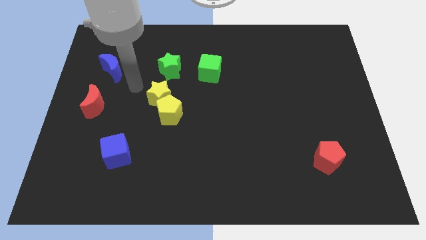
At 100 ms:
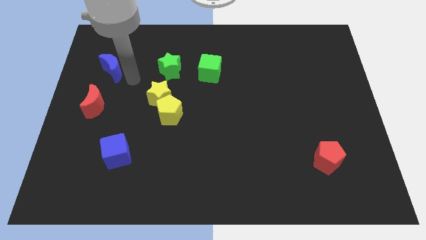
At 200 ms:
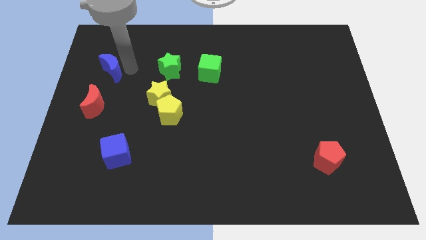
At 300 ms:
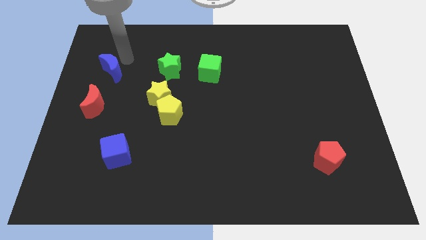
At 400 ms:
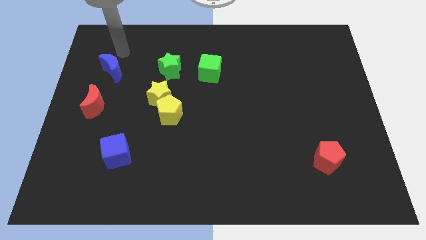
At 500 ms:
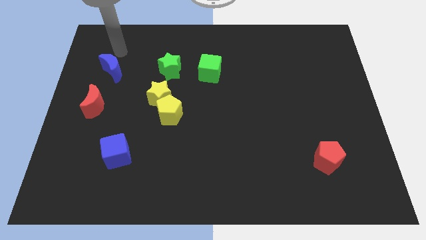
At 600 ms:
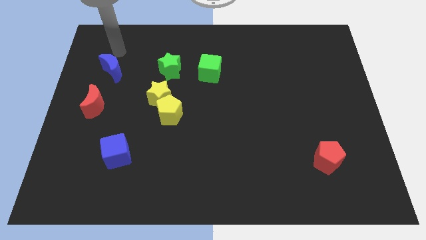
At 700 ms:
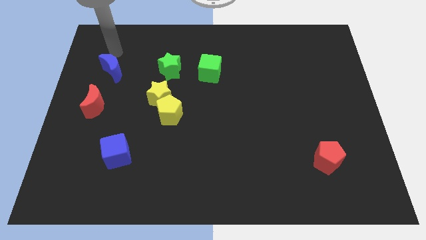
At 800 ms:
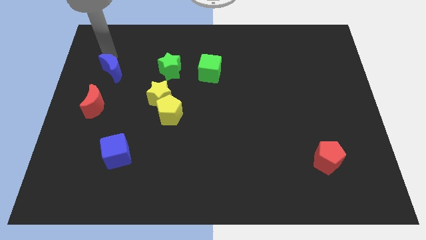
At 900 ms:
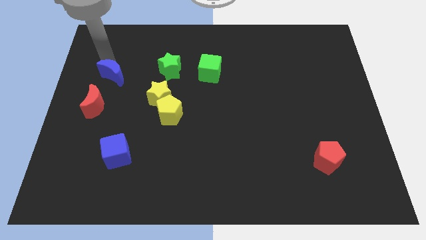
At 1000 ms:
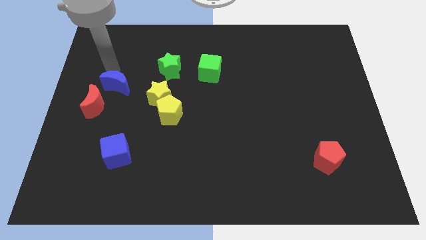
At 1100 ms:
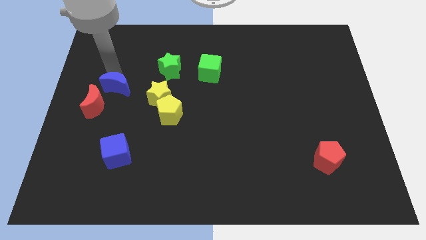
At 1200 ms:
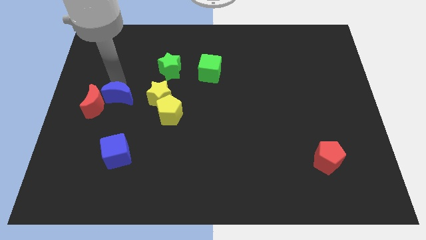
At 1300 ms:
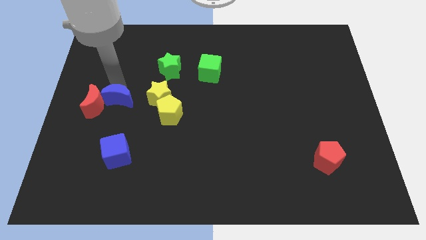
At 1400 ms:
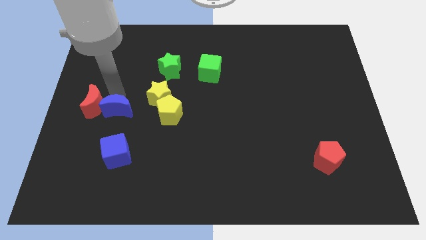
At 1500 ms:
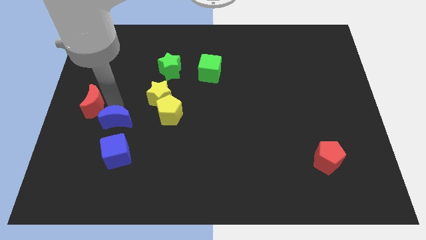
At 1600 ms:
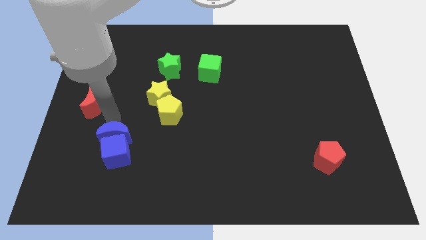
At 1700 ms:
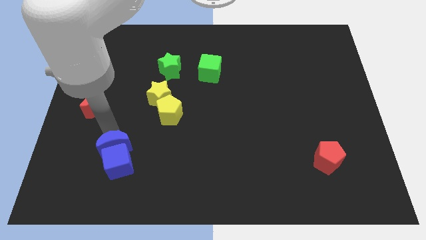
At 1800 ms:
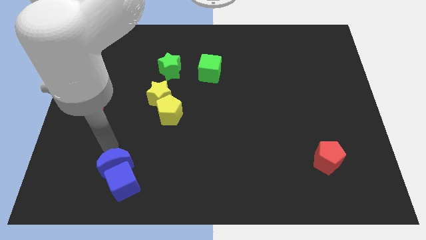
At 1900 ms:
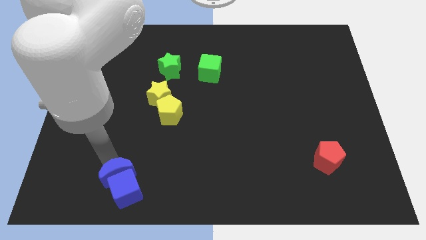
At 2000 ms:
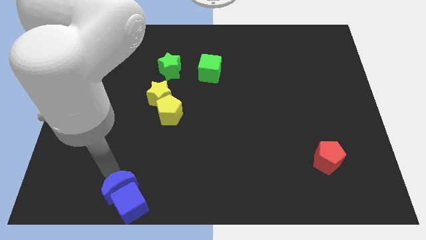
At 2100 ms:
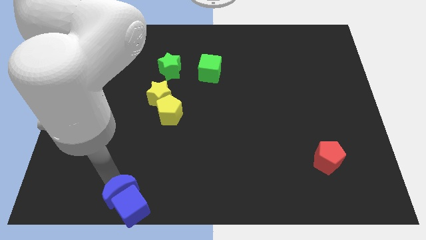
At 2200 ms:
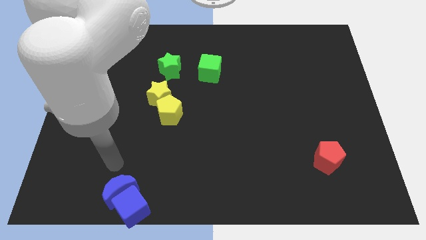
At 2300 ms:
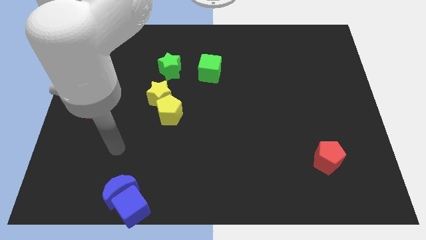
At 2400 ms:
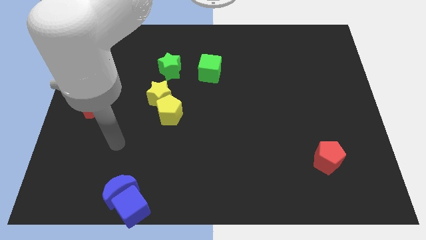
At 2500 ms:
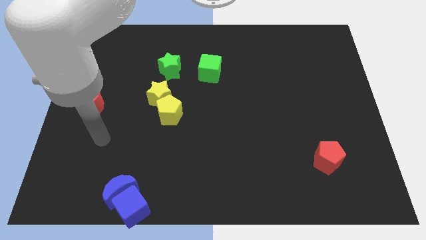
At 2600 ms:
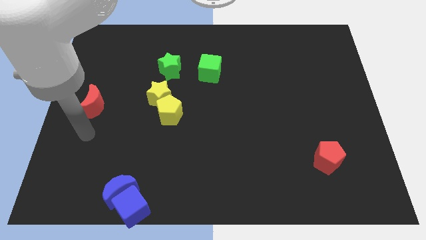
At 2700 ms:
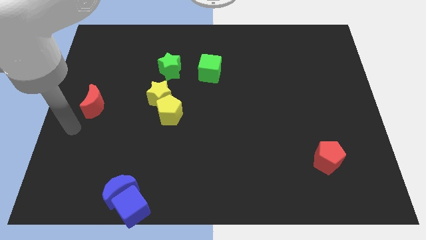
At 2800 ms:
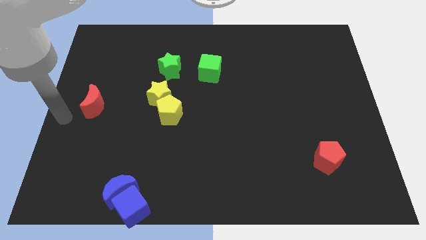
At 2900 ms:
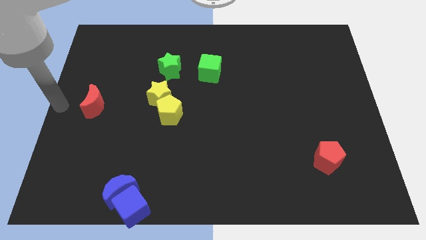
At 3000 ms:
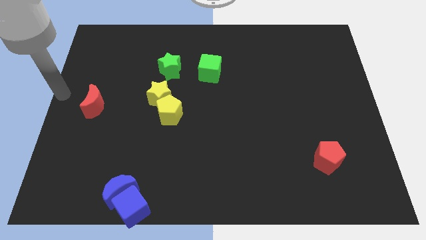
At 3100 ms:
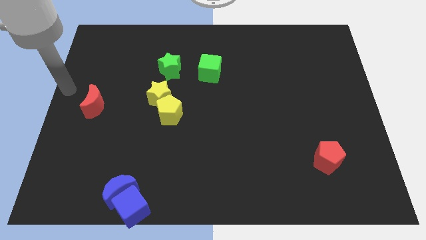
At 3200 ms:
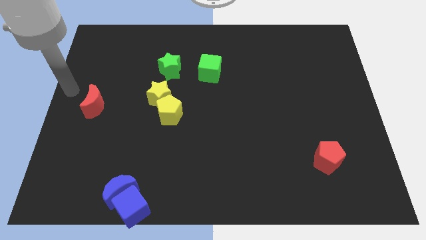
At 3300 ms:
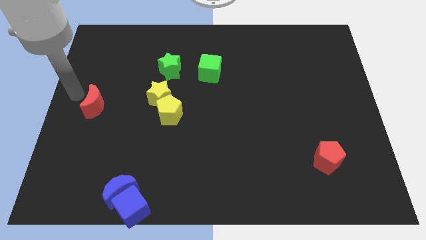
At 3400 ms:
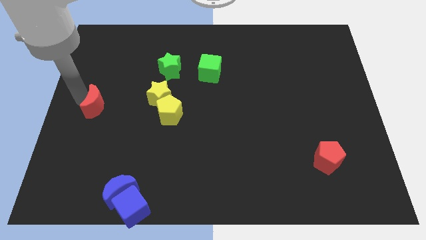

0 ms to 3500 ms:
move the blue blocks towards the bottom center

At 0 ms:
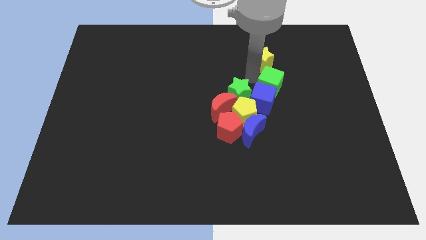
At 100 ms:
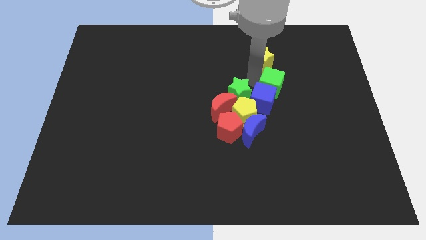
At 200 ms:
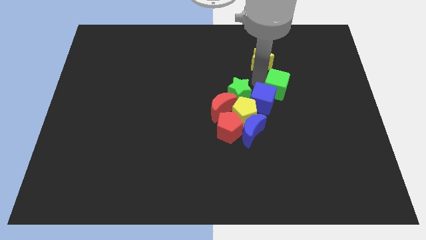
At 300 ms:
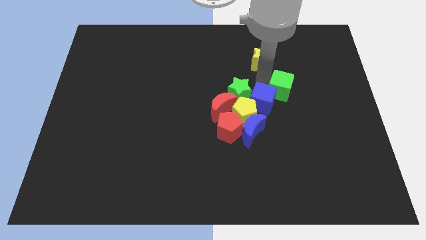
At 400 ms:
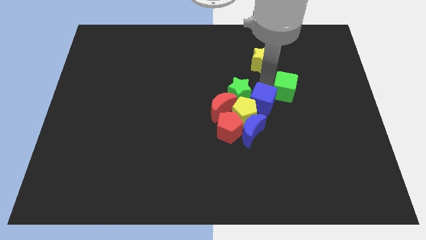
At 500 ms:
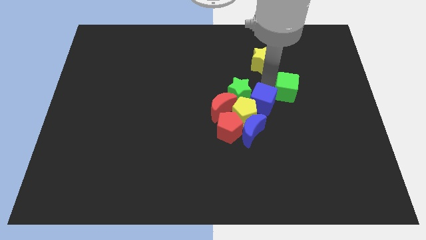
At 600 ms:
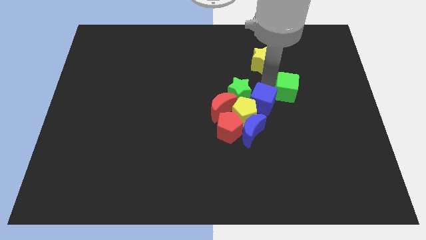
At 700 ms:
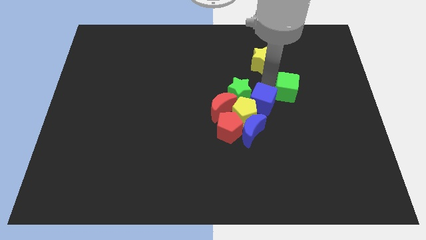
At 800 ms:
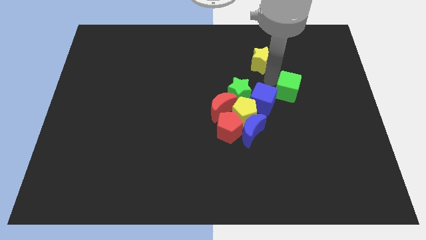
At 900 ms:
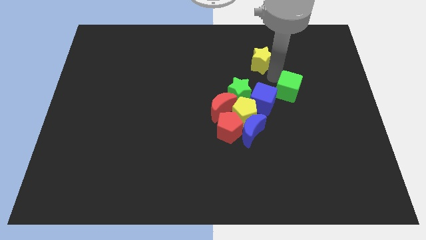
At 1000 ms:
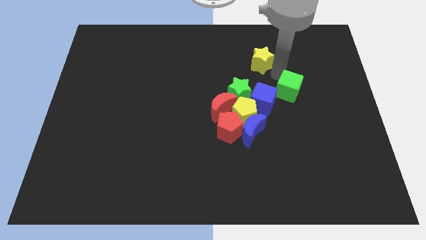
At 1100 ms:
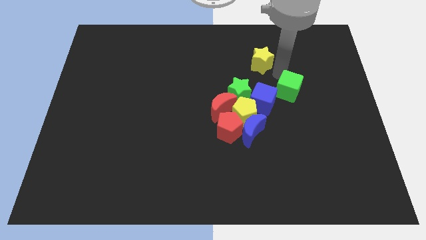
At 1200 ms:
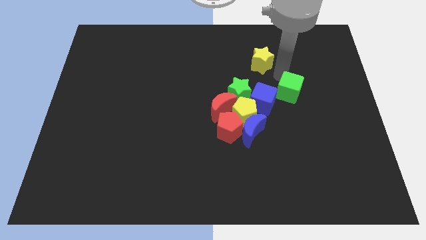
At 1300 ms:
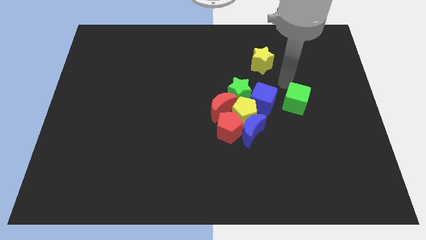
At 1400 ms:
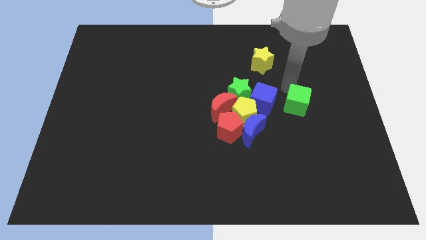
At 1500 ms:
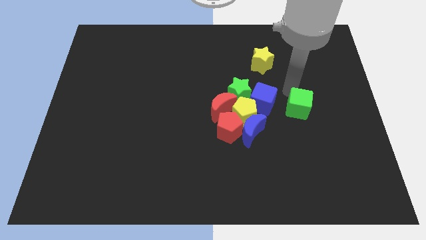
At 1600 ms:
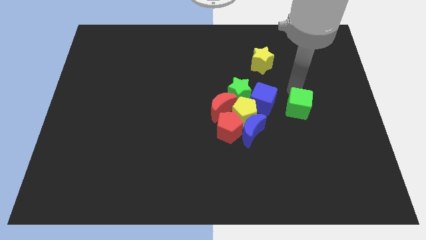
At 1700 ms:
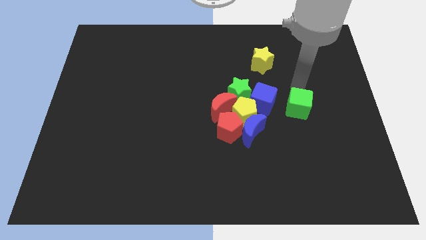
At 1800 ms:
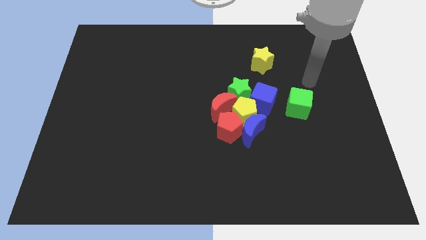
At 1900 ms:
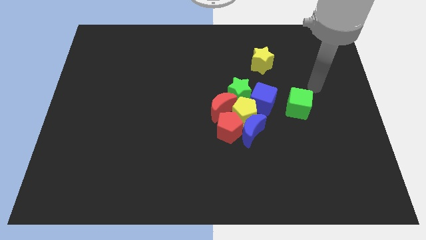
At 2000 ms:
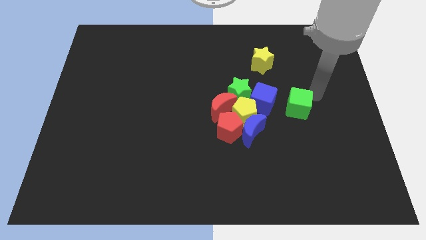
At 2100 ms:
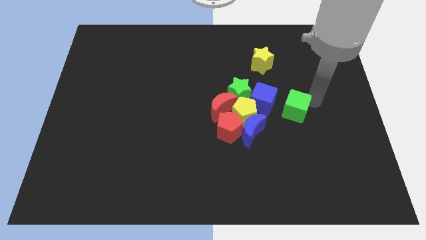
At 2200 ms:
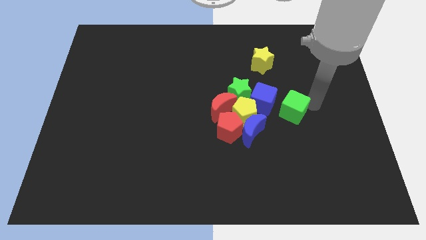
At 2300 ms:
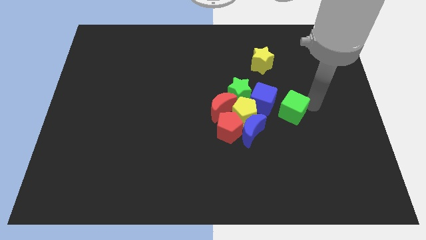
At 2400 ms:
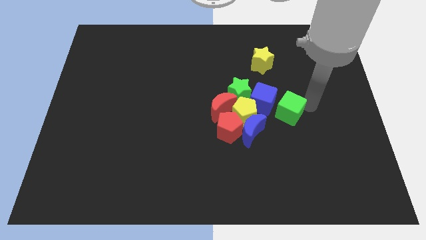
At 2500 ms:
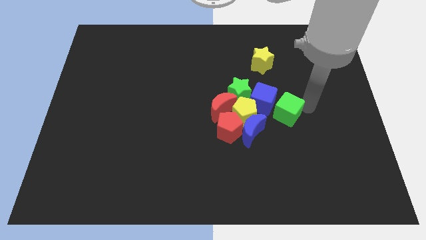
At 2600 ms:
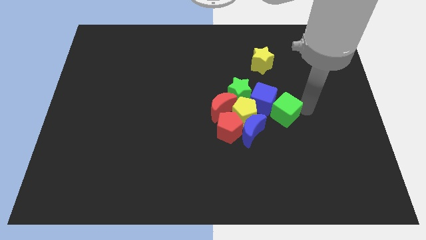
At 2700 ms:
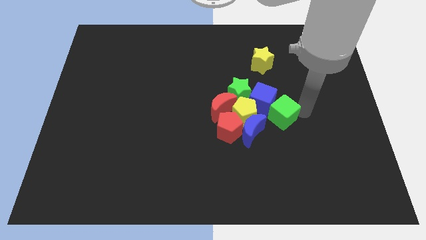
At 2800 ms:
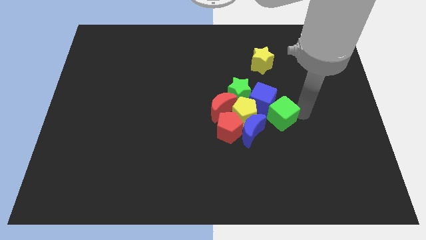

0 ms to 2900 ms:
push the green cube to the bottom right of the blue cube

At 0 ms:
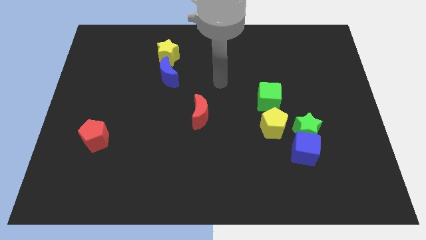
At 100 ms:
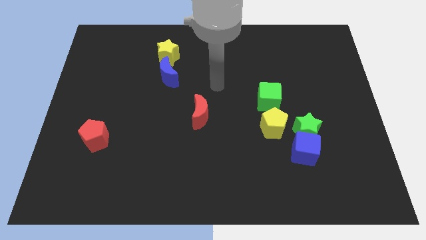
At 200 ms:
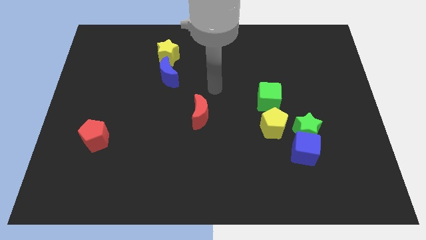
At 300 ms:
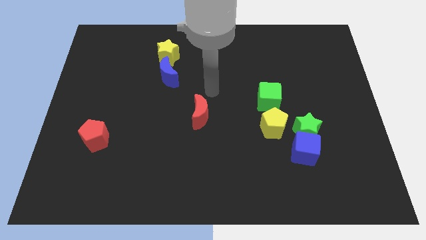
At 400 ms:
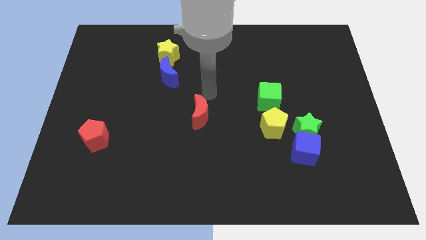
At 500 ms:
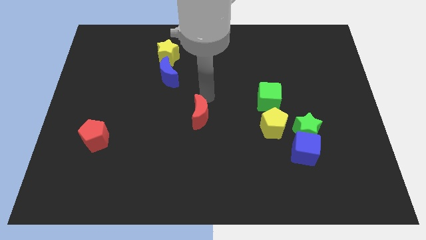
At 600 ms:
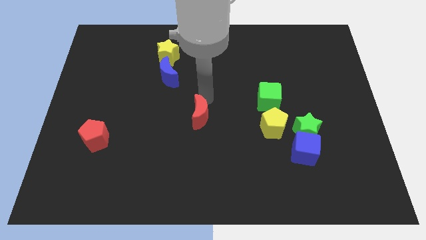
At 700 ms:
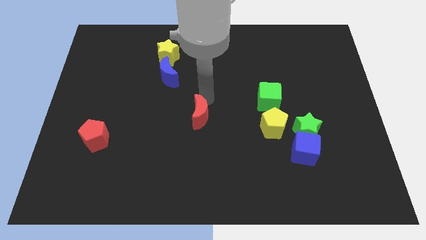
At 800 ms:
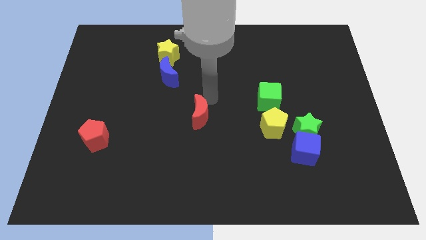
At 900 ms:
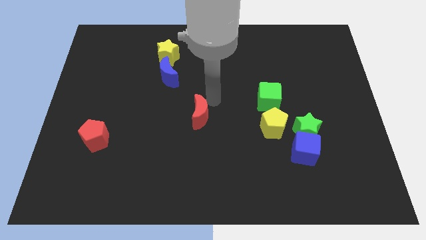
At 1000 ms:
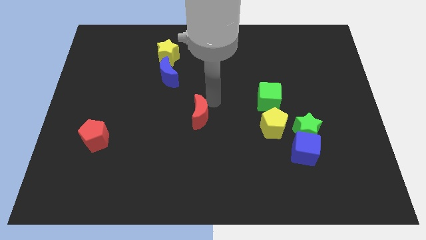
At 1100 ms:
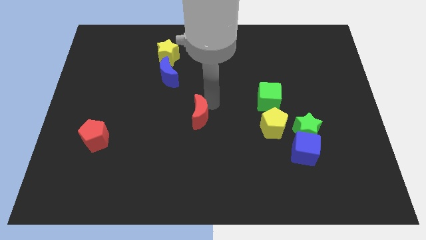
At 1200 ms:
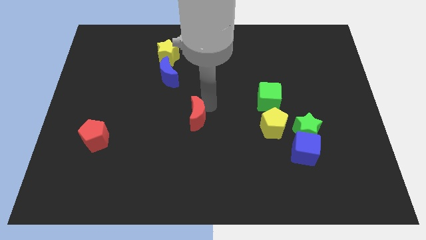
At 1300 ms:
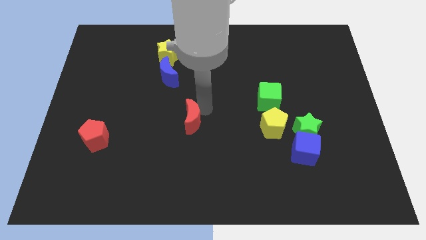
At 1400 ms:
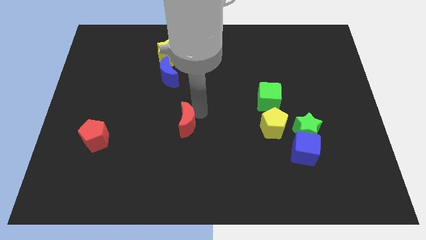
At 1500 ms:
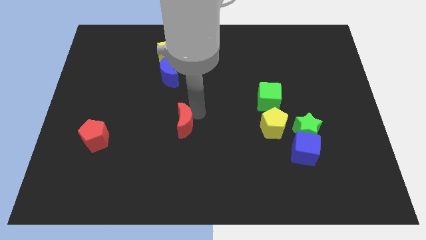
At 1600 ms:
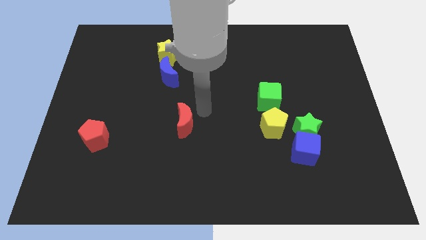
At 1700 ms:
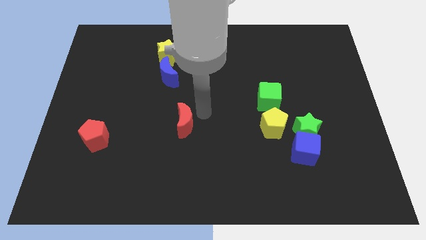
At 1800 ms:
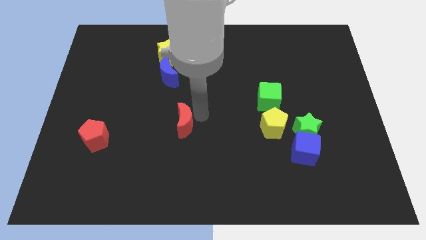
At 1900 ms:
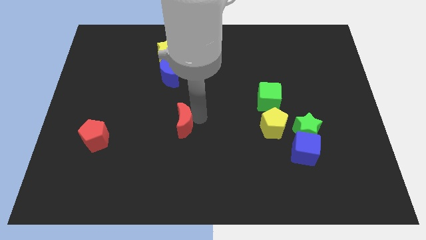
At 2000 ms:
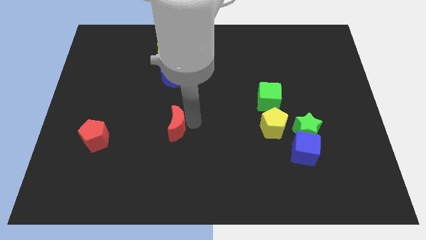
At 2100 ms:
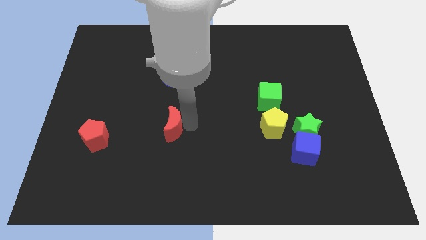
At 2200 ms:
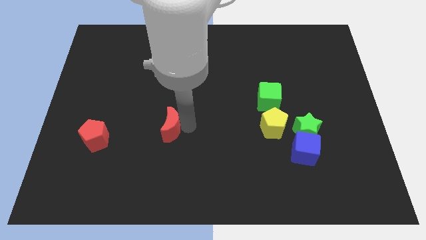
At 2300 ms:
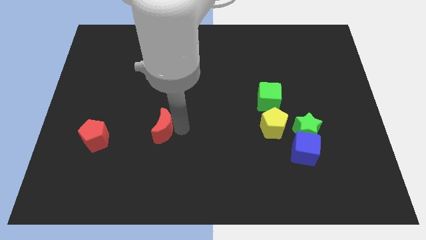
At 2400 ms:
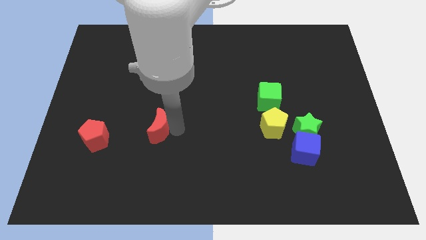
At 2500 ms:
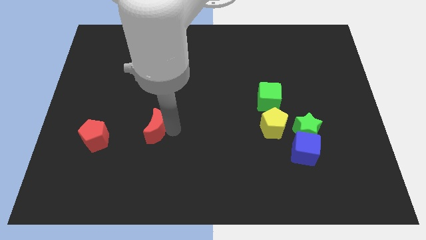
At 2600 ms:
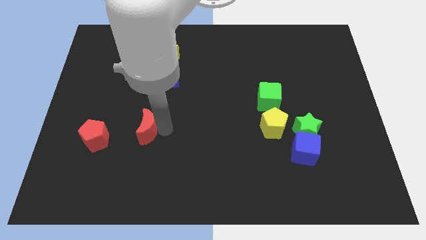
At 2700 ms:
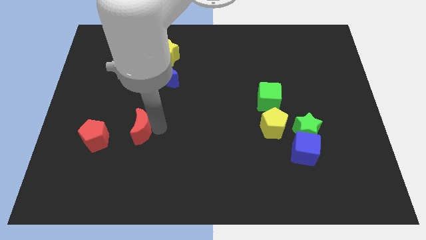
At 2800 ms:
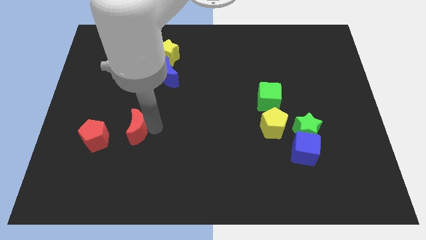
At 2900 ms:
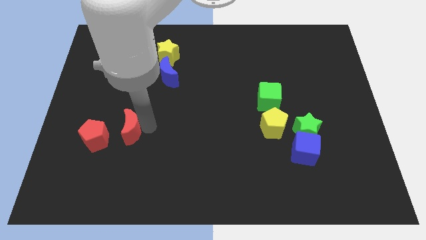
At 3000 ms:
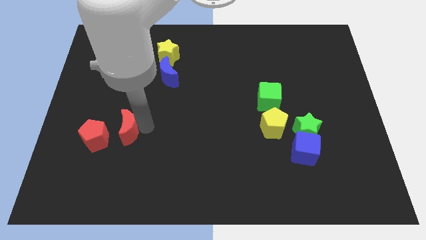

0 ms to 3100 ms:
put the red moon diagonally bottom left to the blue moon
